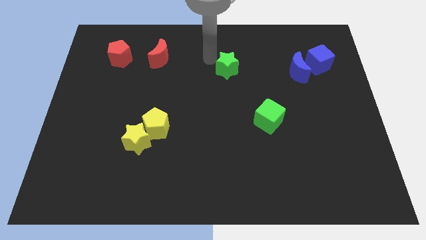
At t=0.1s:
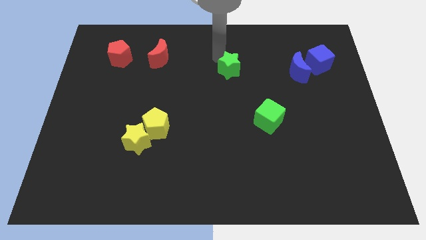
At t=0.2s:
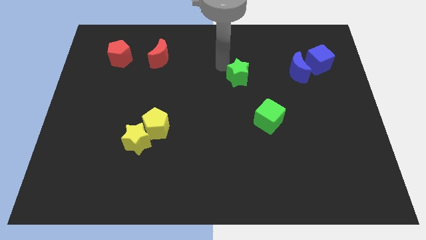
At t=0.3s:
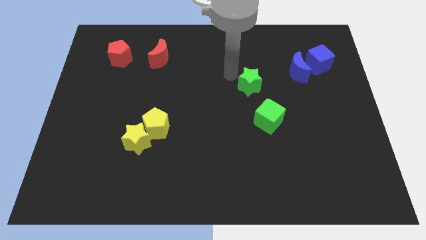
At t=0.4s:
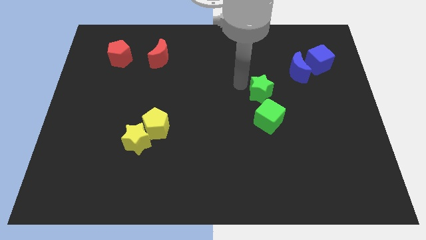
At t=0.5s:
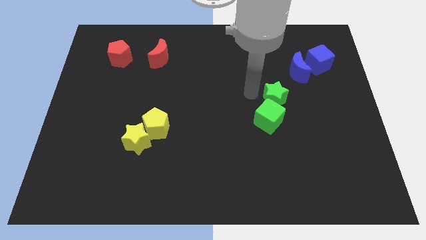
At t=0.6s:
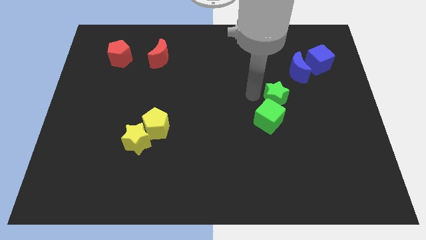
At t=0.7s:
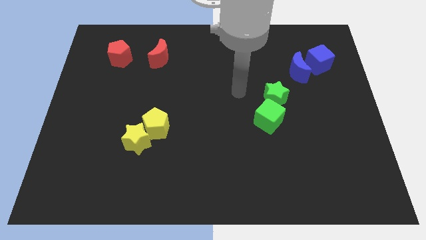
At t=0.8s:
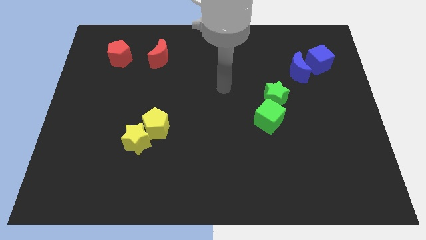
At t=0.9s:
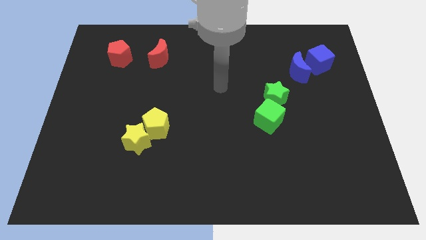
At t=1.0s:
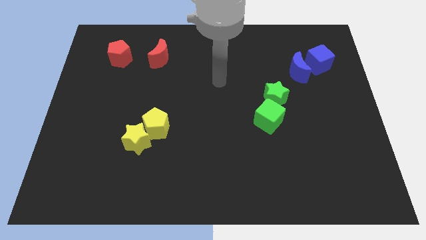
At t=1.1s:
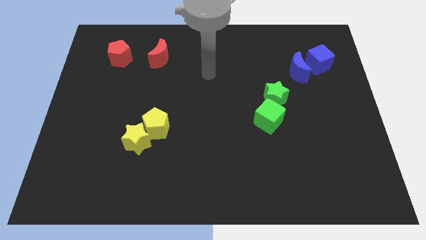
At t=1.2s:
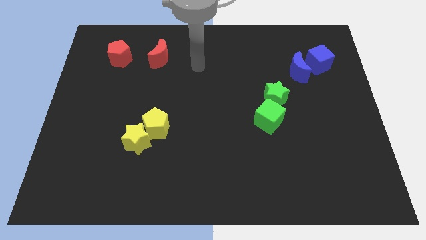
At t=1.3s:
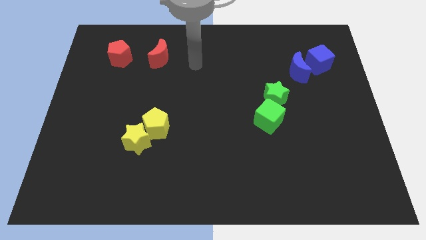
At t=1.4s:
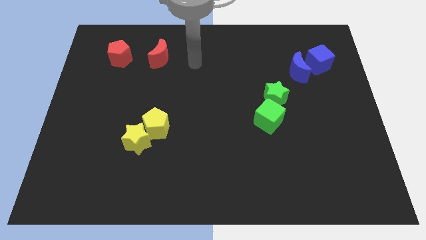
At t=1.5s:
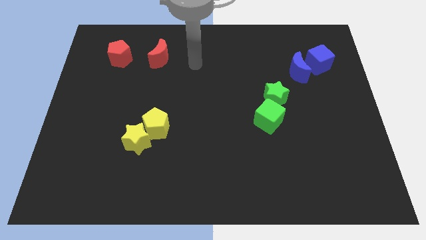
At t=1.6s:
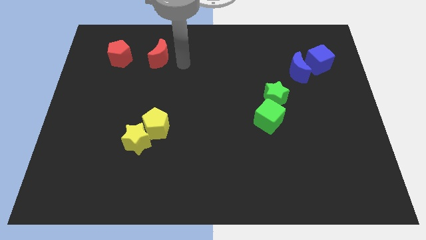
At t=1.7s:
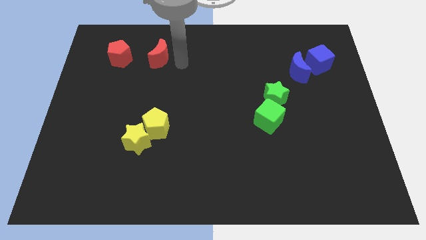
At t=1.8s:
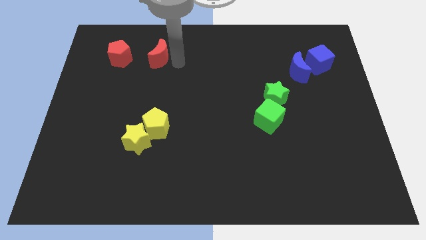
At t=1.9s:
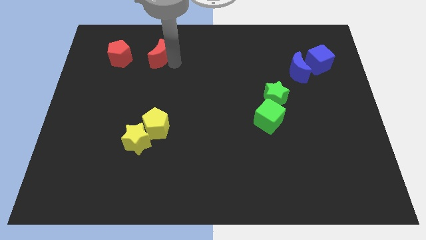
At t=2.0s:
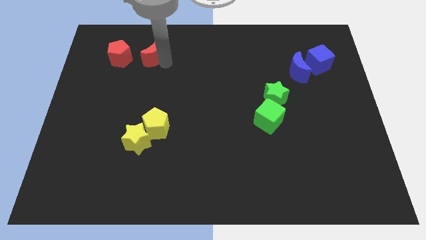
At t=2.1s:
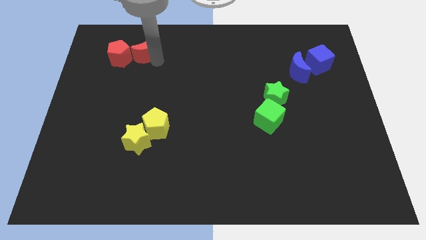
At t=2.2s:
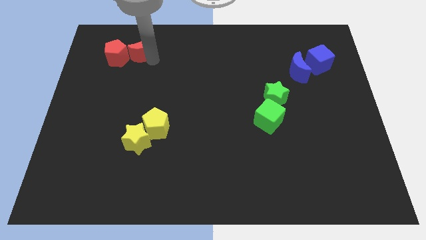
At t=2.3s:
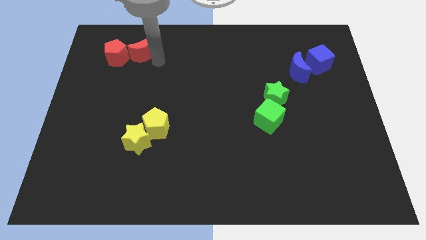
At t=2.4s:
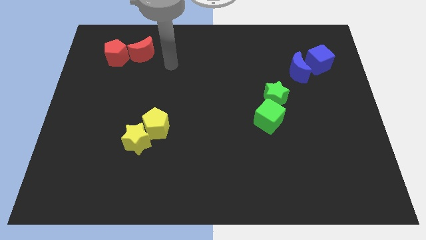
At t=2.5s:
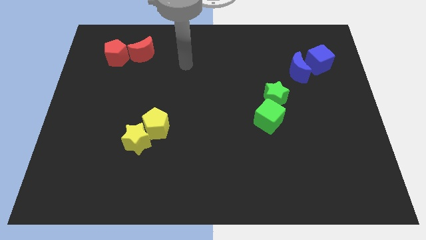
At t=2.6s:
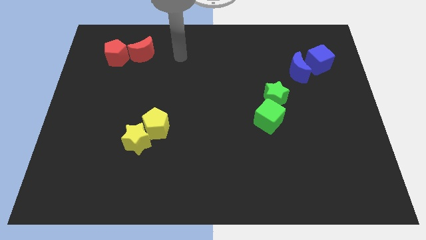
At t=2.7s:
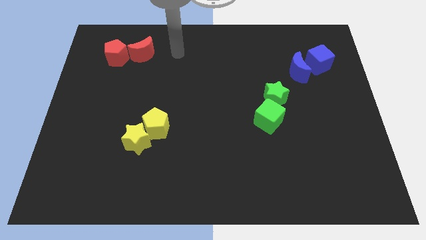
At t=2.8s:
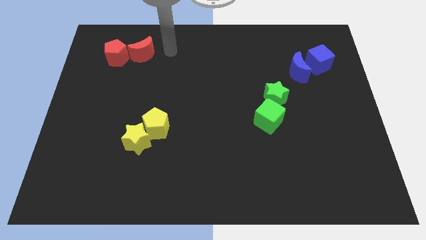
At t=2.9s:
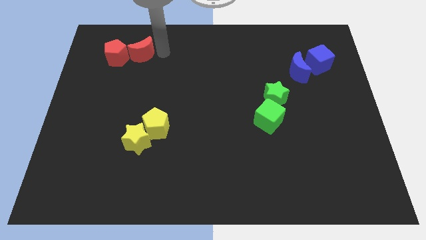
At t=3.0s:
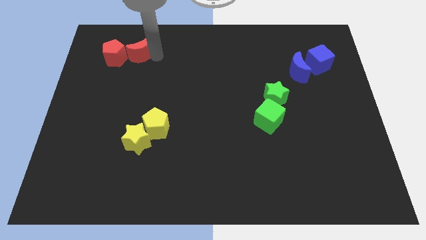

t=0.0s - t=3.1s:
move the green star into the green cube

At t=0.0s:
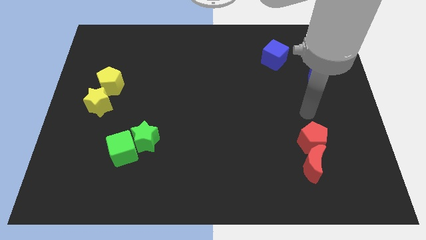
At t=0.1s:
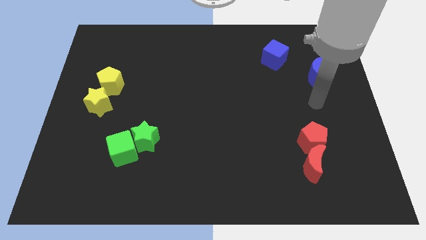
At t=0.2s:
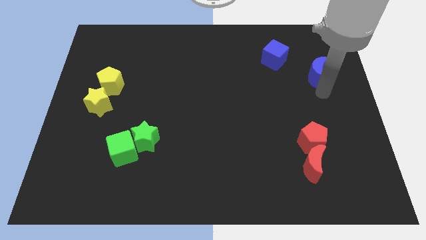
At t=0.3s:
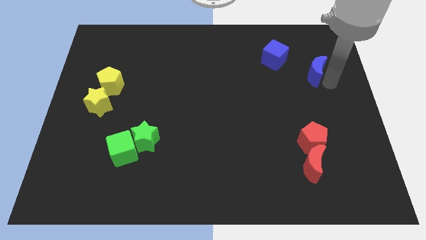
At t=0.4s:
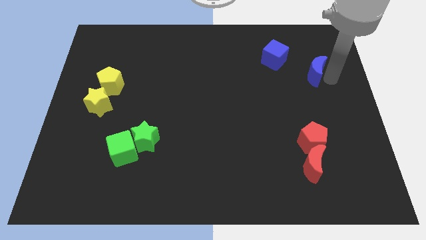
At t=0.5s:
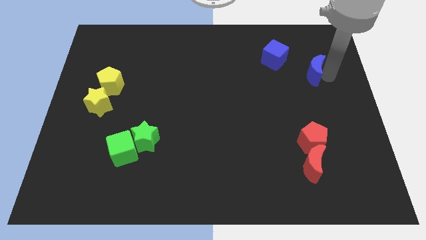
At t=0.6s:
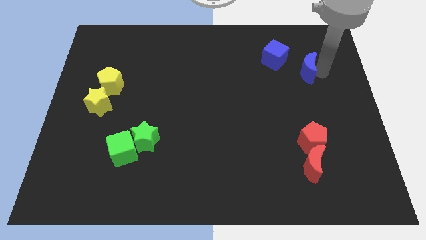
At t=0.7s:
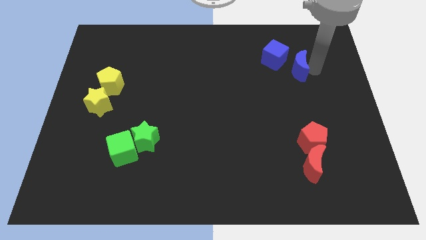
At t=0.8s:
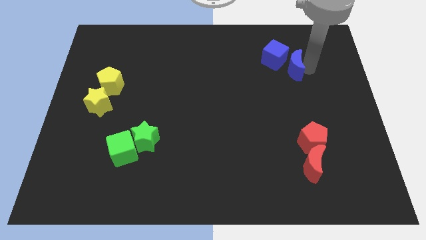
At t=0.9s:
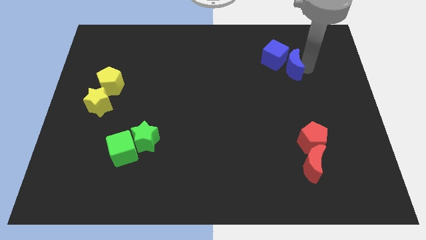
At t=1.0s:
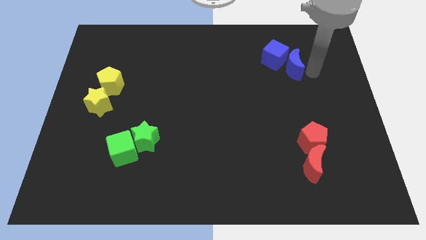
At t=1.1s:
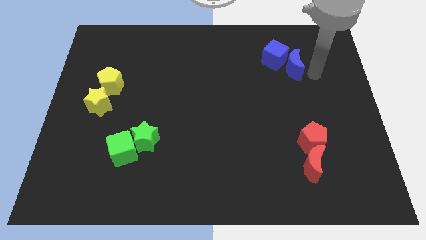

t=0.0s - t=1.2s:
push the blue moon towards the blue cube

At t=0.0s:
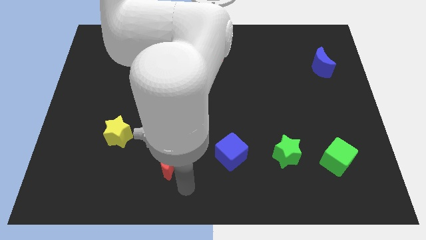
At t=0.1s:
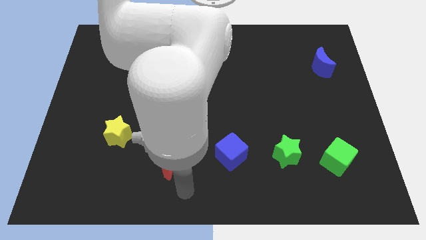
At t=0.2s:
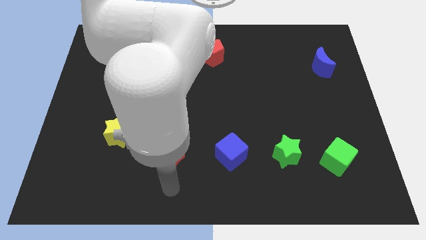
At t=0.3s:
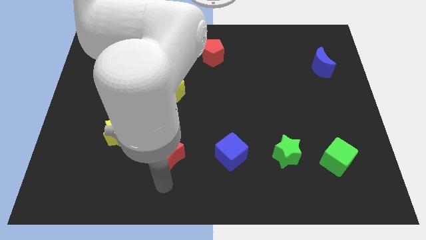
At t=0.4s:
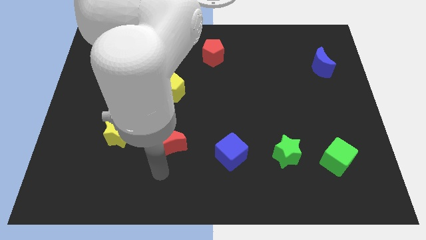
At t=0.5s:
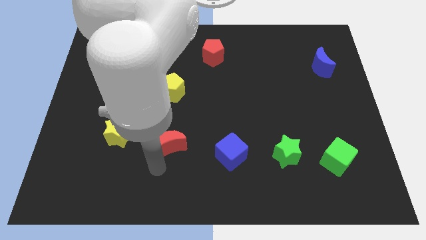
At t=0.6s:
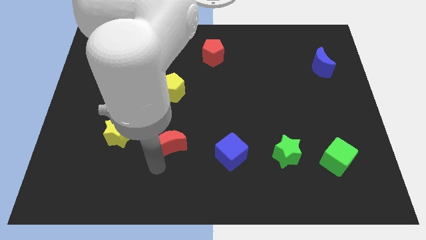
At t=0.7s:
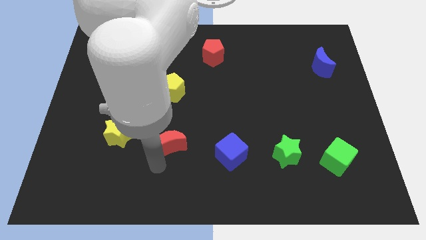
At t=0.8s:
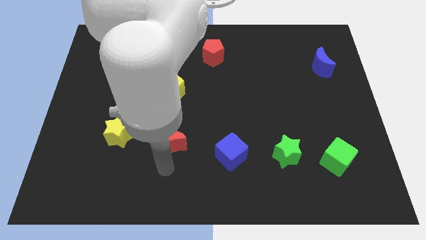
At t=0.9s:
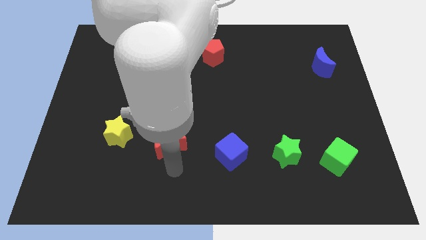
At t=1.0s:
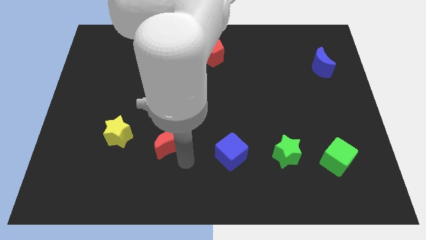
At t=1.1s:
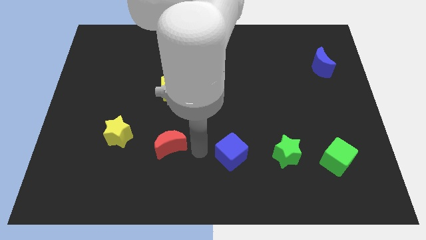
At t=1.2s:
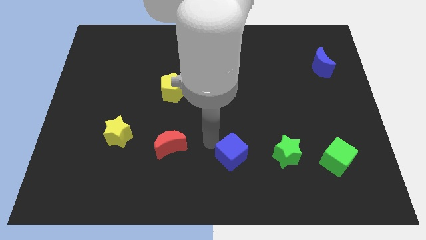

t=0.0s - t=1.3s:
move the red crescent left to the blue cube

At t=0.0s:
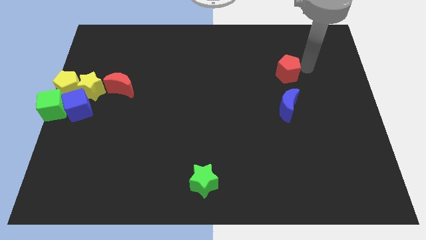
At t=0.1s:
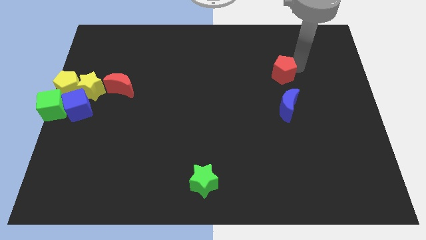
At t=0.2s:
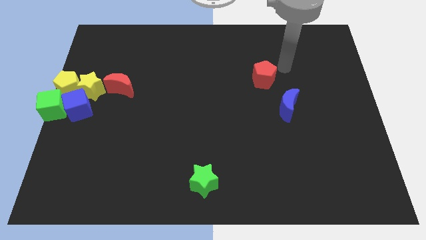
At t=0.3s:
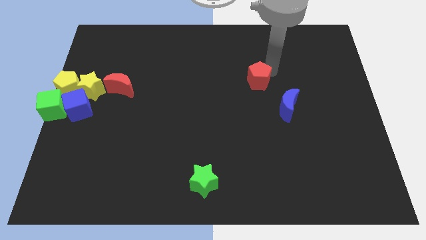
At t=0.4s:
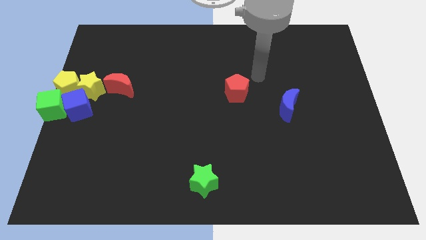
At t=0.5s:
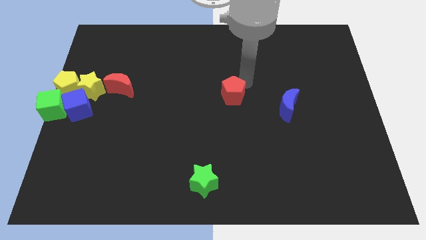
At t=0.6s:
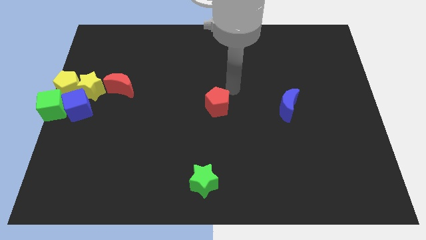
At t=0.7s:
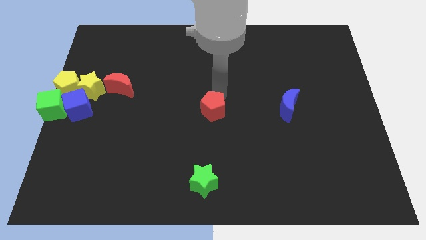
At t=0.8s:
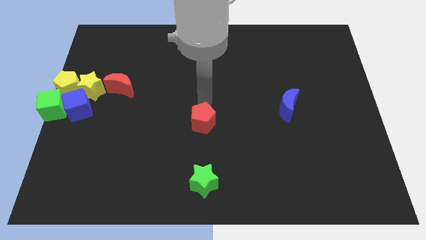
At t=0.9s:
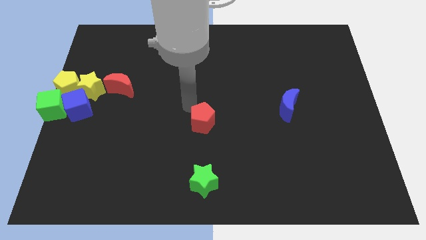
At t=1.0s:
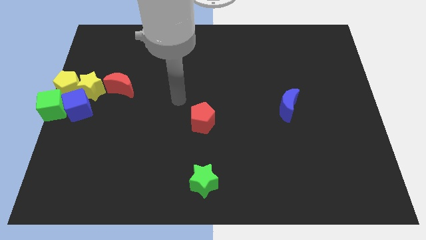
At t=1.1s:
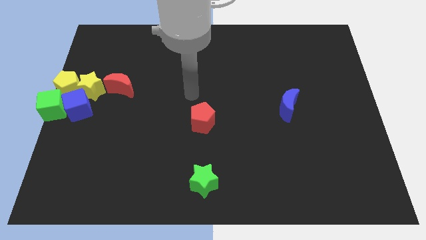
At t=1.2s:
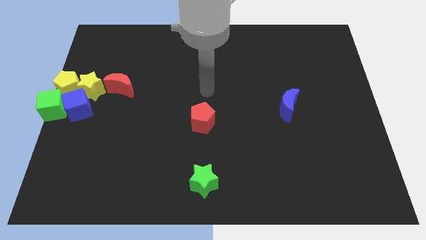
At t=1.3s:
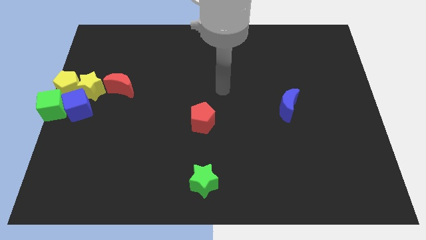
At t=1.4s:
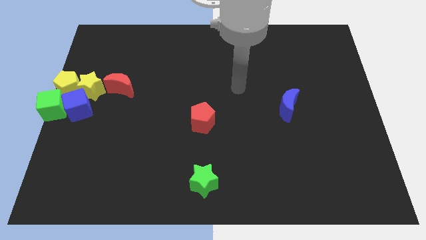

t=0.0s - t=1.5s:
put the red pentagon above the green star

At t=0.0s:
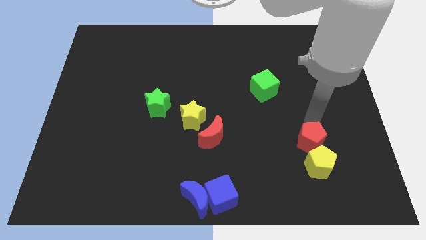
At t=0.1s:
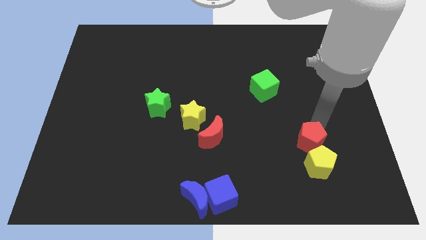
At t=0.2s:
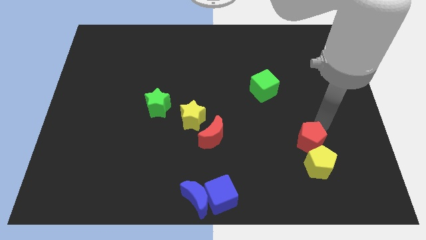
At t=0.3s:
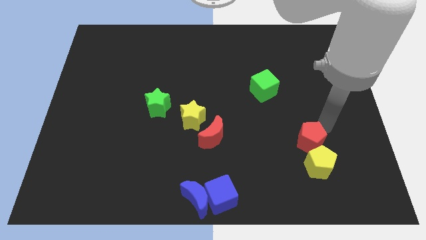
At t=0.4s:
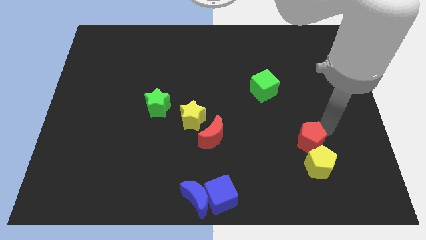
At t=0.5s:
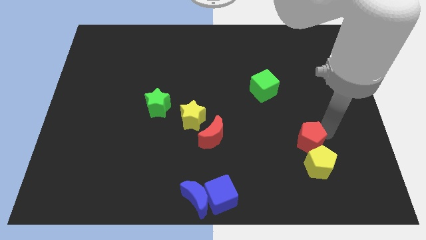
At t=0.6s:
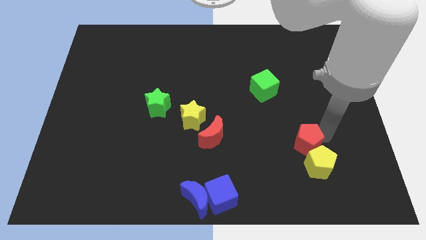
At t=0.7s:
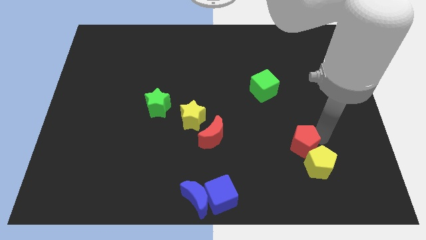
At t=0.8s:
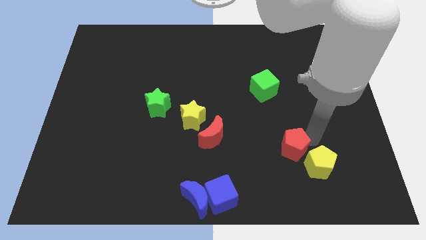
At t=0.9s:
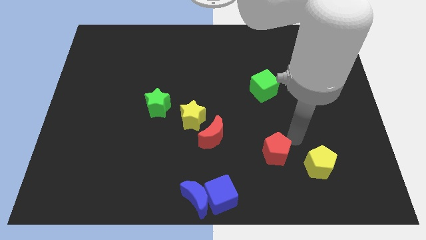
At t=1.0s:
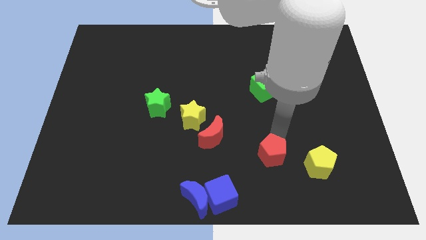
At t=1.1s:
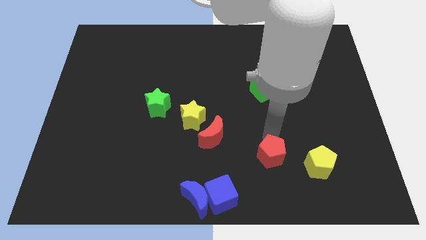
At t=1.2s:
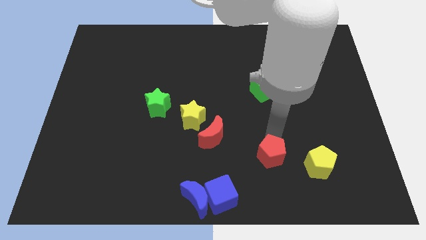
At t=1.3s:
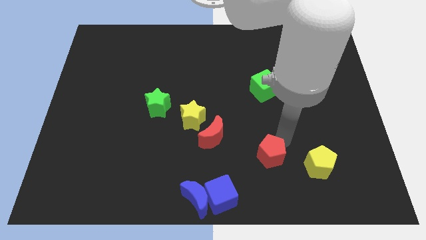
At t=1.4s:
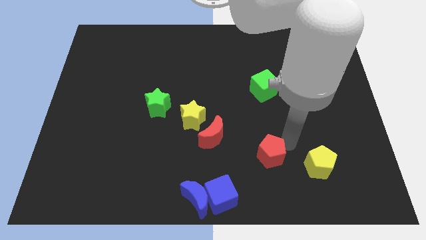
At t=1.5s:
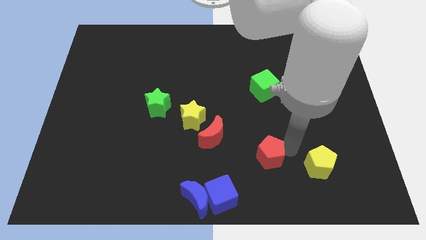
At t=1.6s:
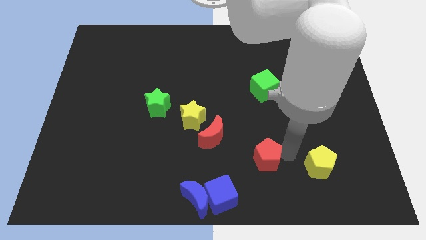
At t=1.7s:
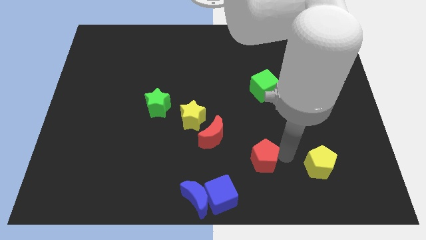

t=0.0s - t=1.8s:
separate the red pentagon from the yellow pentagon
